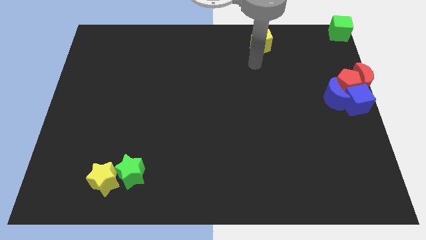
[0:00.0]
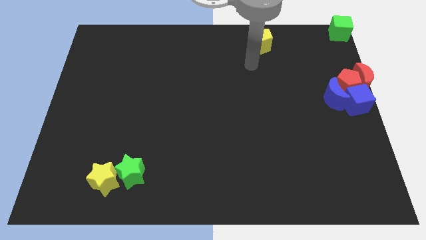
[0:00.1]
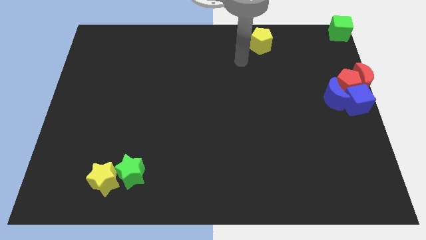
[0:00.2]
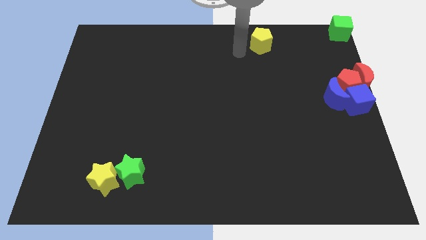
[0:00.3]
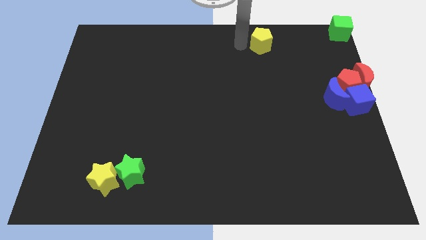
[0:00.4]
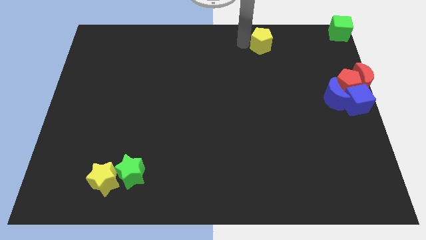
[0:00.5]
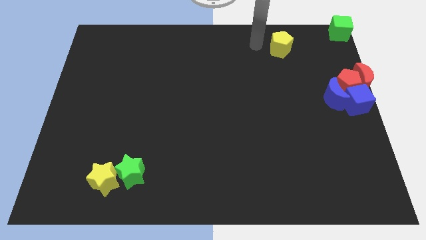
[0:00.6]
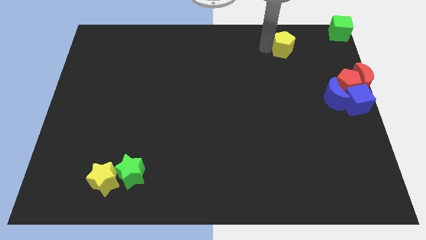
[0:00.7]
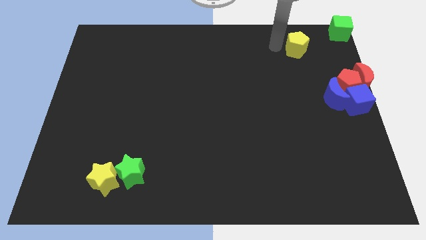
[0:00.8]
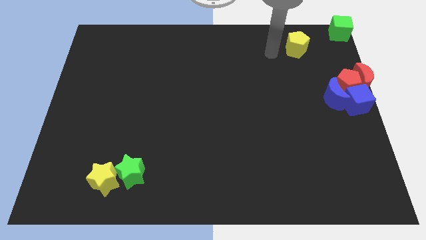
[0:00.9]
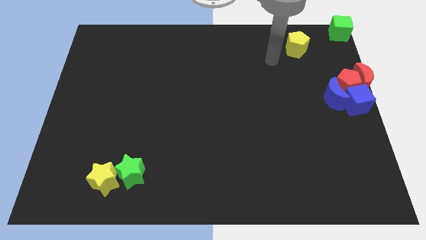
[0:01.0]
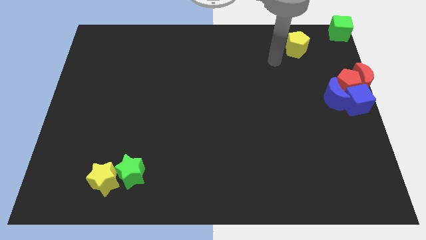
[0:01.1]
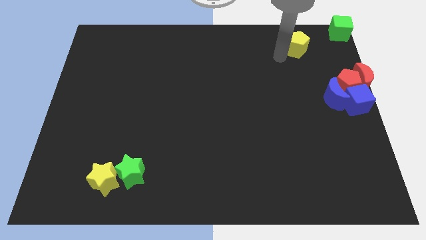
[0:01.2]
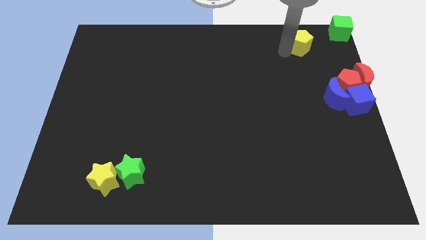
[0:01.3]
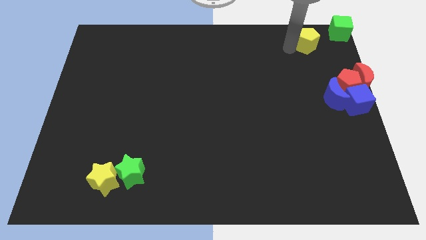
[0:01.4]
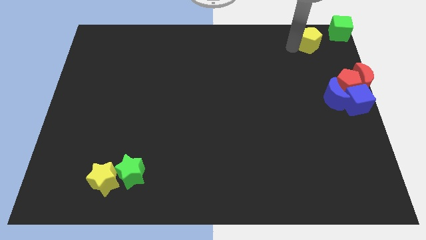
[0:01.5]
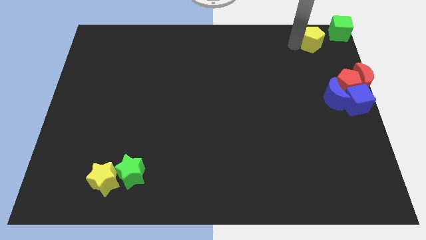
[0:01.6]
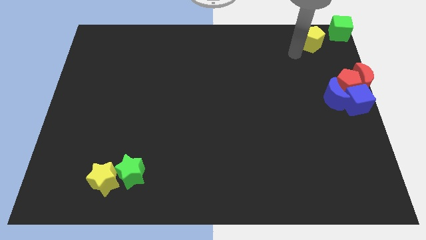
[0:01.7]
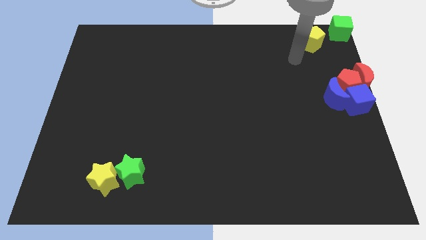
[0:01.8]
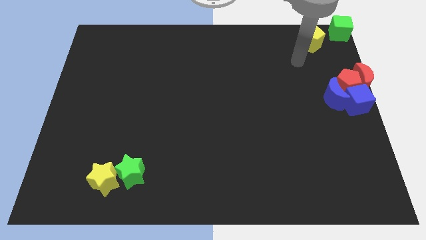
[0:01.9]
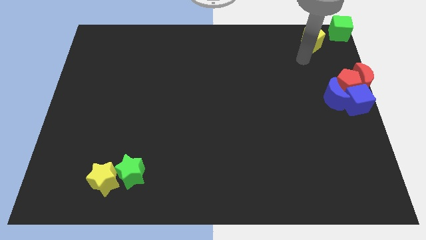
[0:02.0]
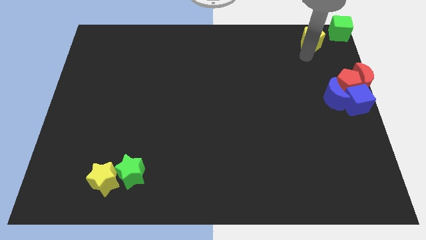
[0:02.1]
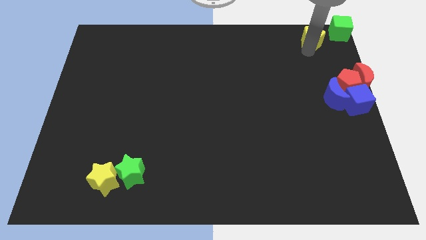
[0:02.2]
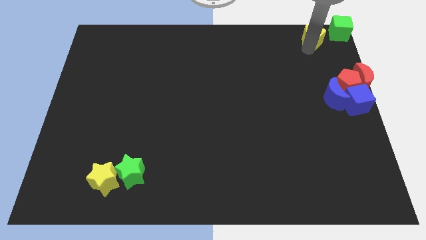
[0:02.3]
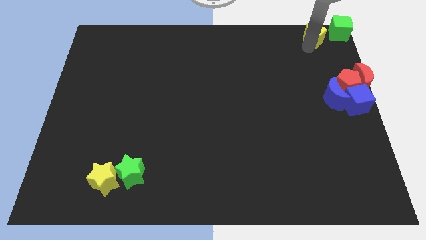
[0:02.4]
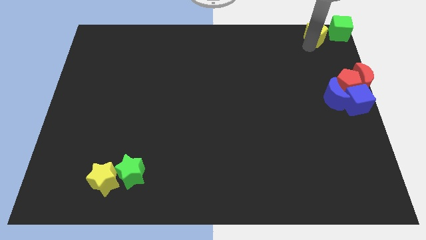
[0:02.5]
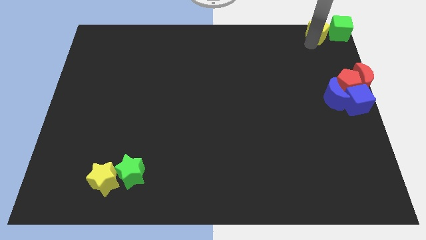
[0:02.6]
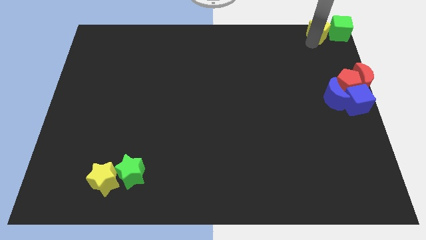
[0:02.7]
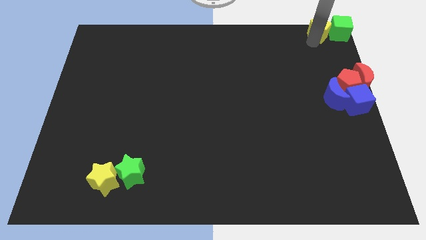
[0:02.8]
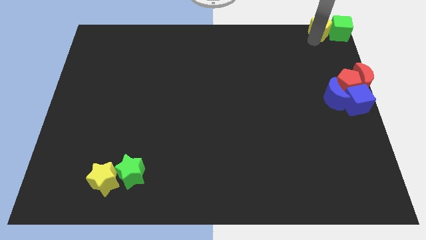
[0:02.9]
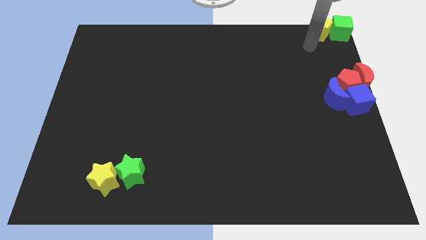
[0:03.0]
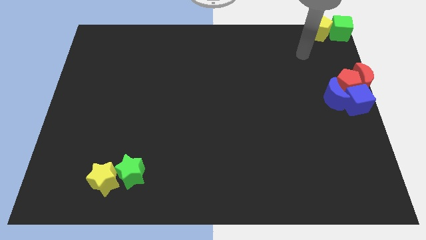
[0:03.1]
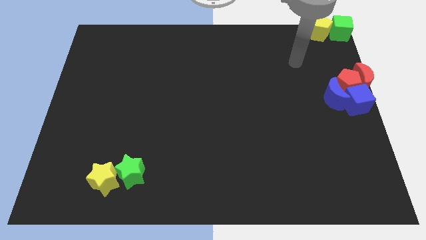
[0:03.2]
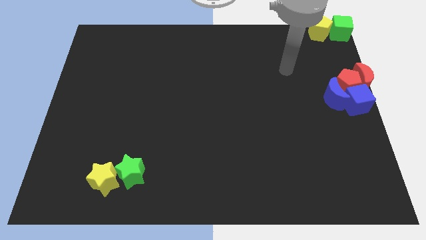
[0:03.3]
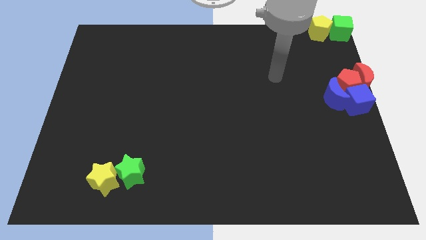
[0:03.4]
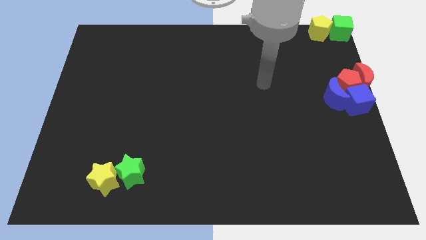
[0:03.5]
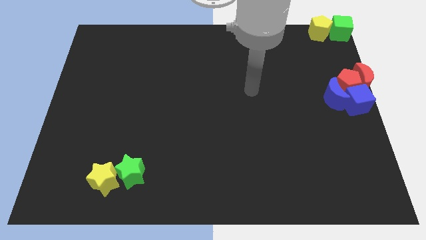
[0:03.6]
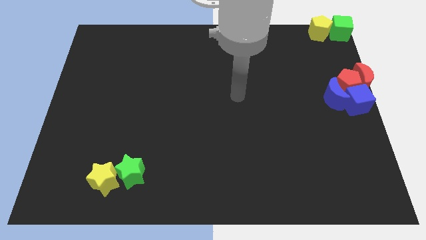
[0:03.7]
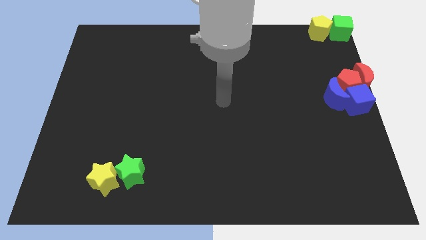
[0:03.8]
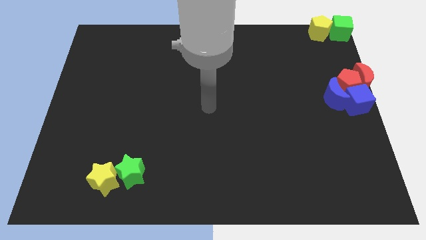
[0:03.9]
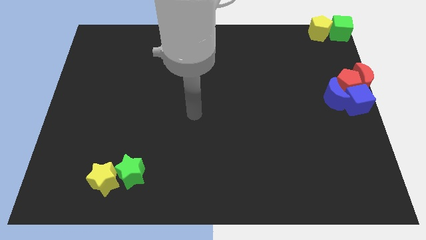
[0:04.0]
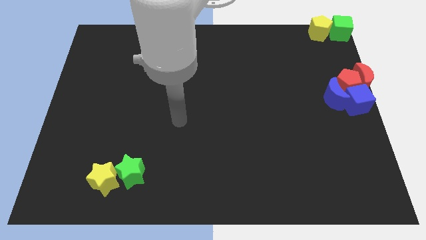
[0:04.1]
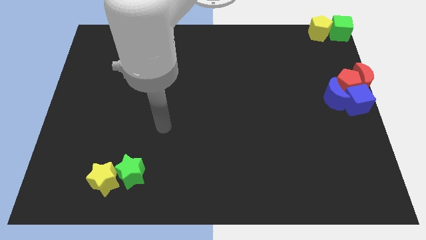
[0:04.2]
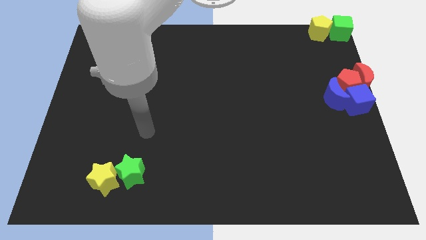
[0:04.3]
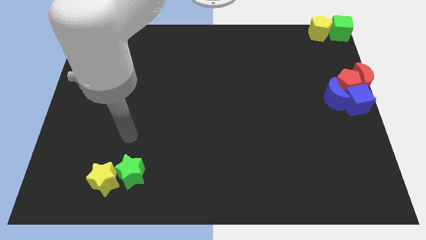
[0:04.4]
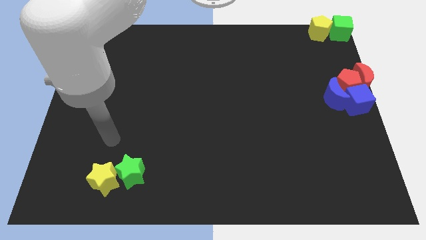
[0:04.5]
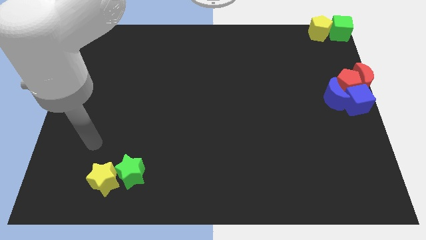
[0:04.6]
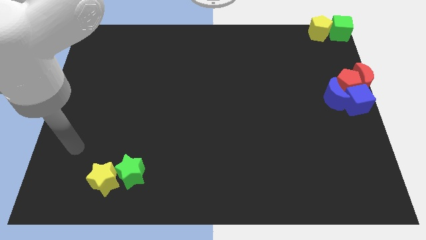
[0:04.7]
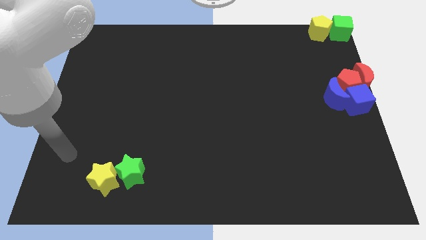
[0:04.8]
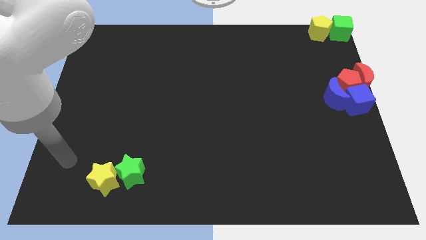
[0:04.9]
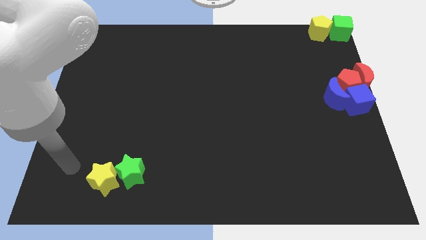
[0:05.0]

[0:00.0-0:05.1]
push the yellow pentagon into the green cube

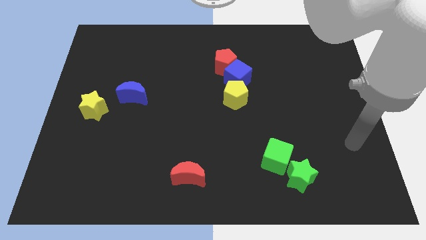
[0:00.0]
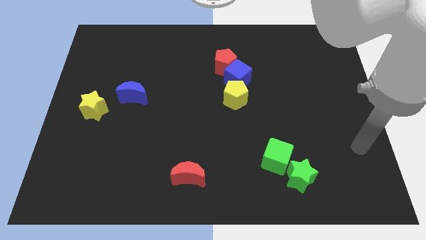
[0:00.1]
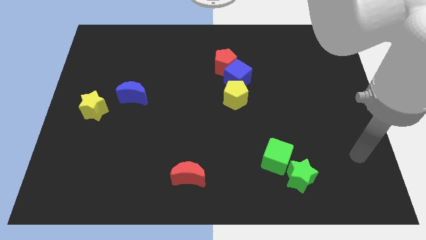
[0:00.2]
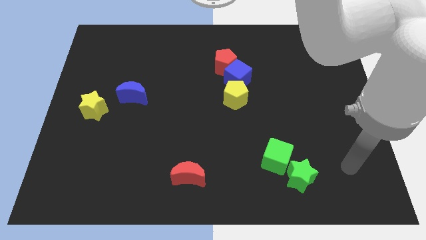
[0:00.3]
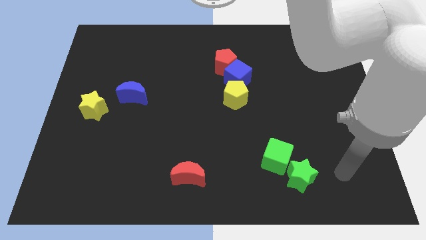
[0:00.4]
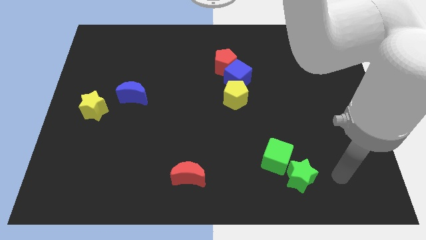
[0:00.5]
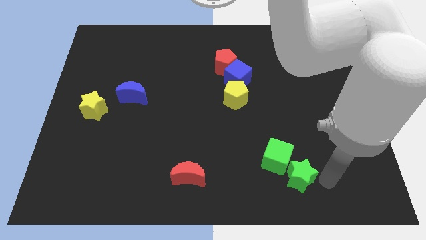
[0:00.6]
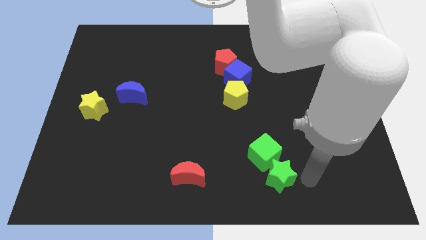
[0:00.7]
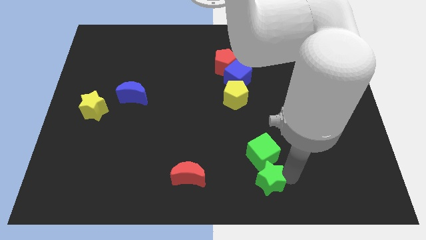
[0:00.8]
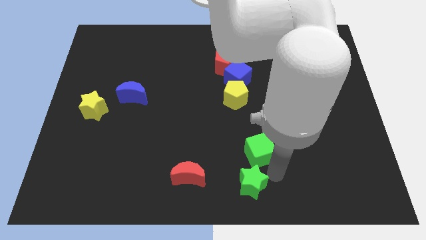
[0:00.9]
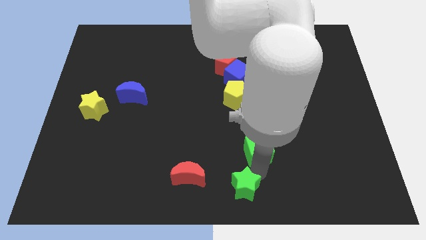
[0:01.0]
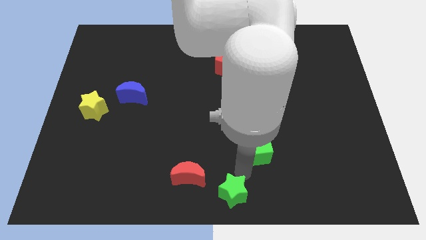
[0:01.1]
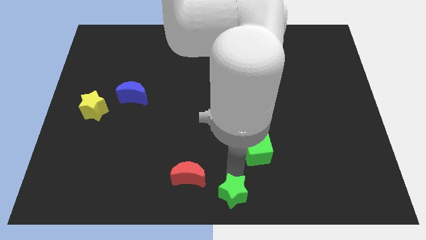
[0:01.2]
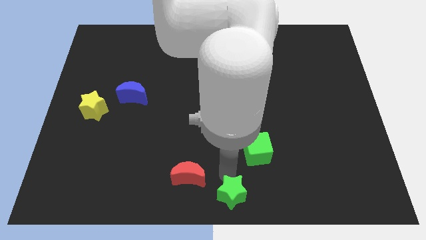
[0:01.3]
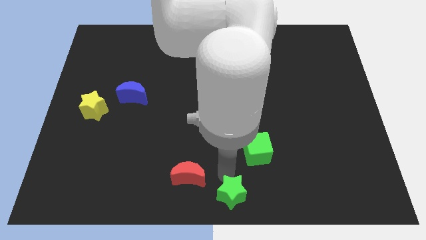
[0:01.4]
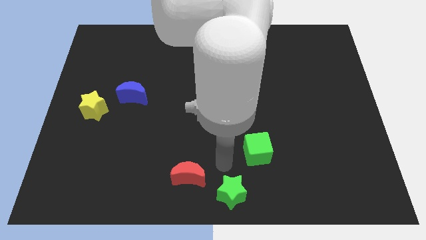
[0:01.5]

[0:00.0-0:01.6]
move the green star towards the bottom center of the board

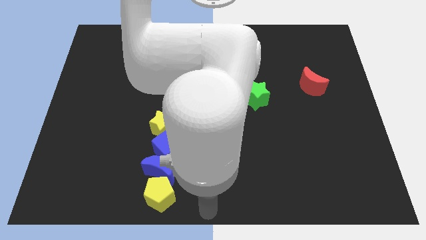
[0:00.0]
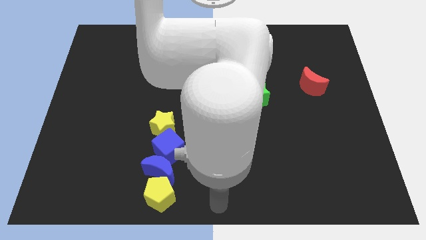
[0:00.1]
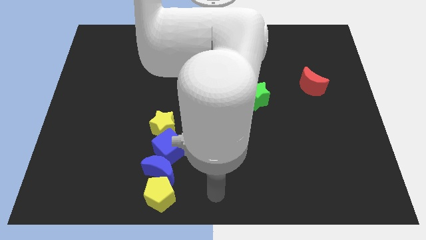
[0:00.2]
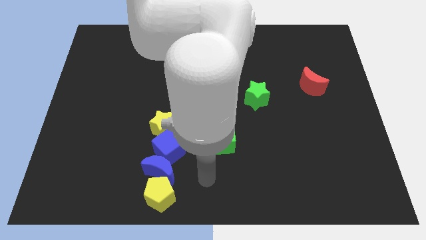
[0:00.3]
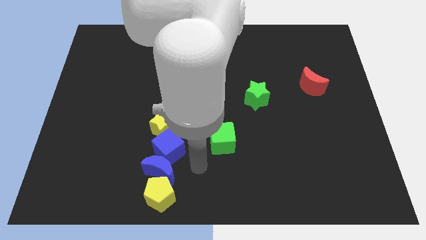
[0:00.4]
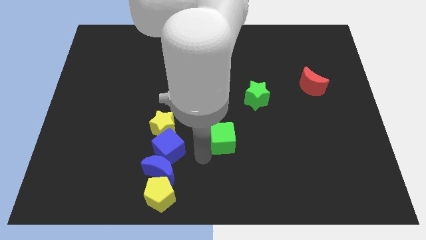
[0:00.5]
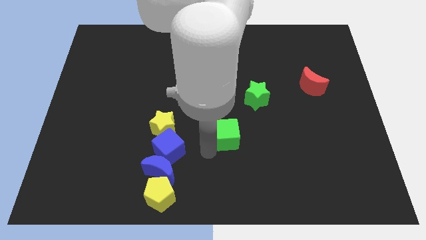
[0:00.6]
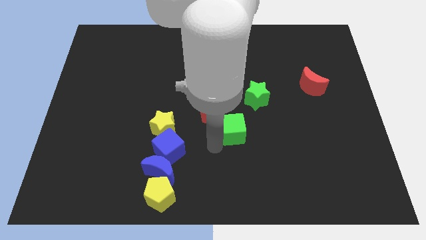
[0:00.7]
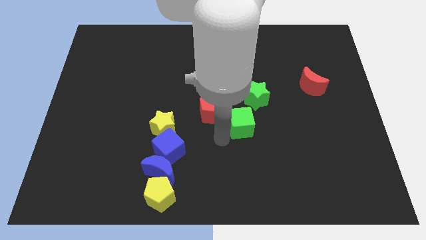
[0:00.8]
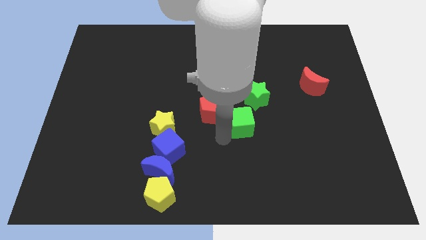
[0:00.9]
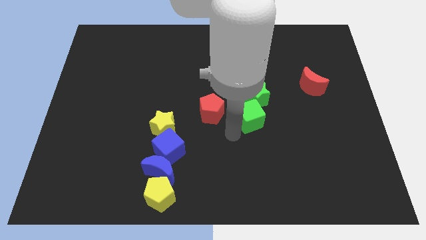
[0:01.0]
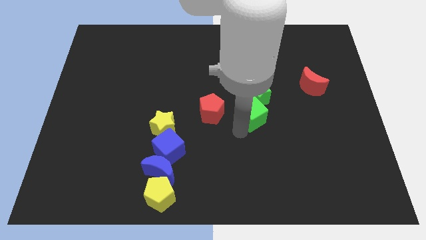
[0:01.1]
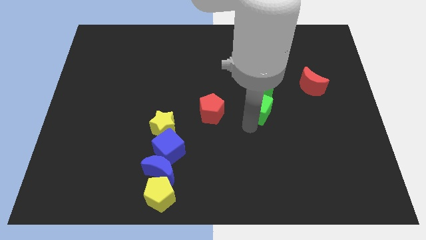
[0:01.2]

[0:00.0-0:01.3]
drag the green cube into the bottom side of the green star

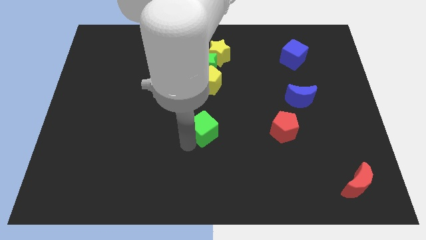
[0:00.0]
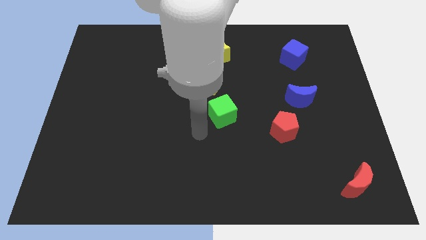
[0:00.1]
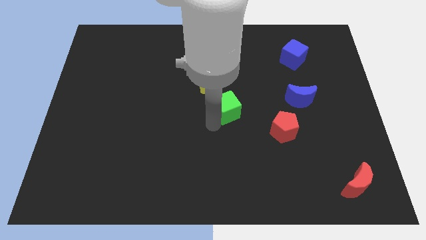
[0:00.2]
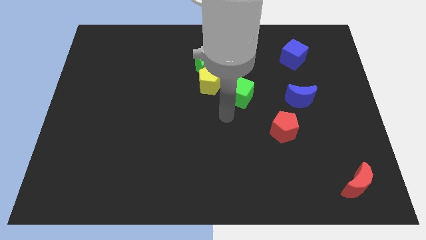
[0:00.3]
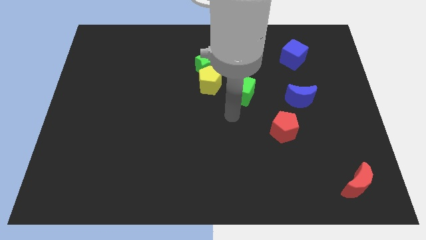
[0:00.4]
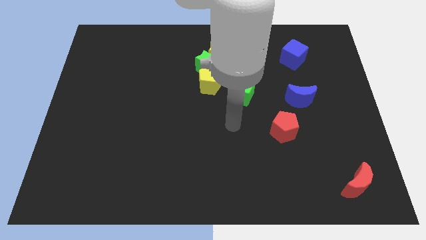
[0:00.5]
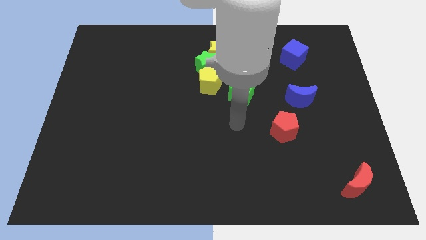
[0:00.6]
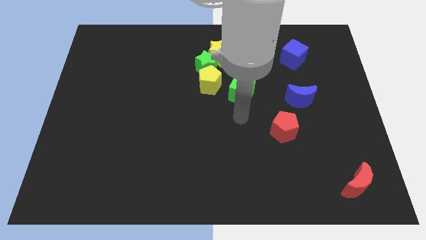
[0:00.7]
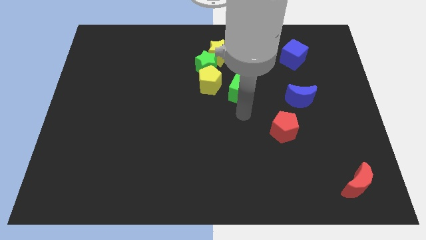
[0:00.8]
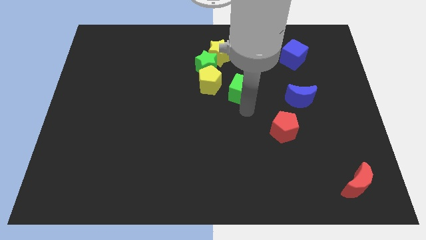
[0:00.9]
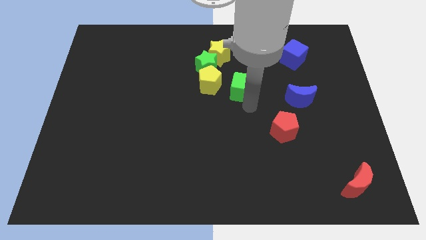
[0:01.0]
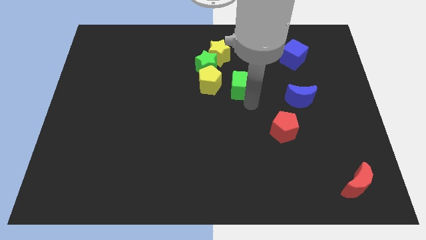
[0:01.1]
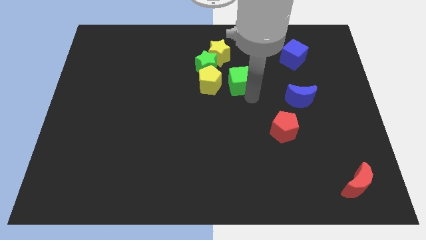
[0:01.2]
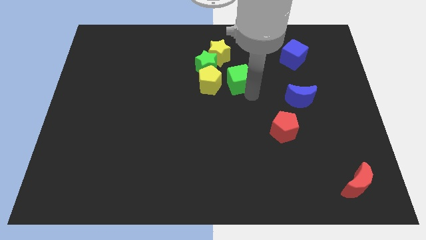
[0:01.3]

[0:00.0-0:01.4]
slide the green cube right beside the yellow pentagon
